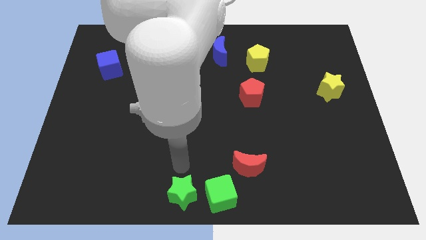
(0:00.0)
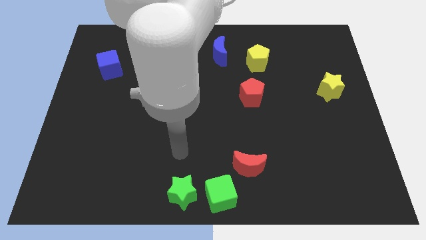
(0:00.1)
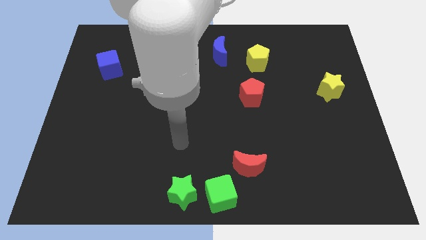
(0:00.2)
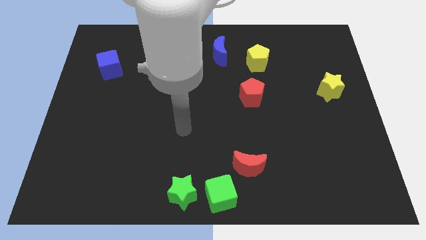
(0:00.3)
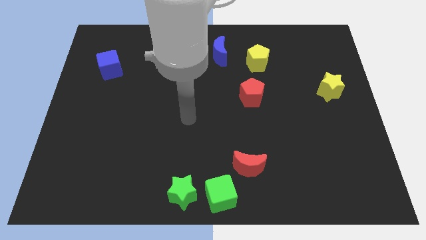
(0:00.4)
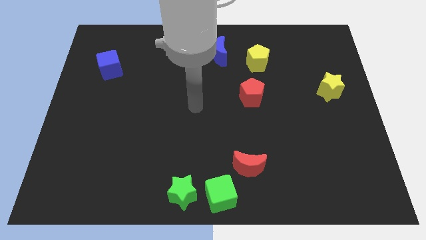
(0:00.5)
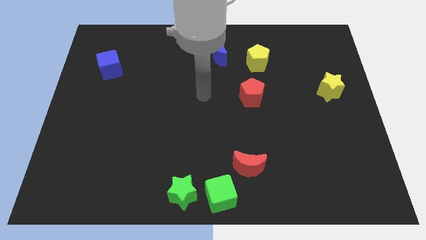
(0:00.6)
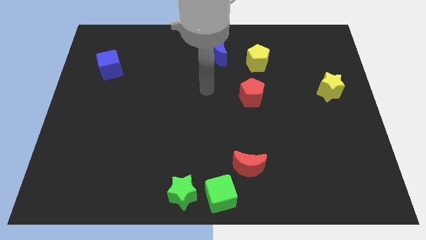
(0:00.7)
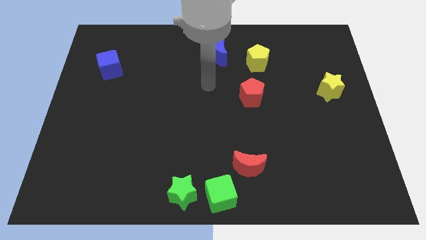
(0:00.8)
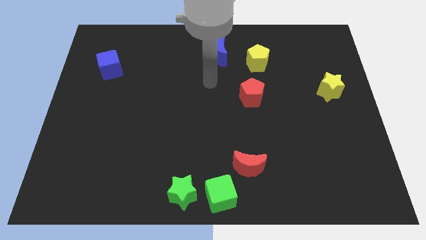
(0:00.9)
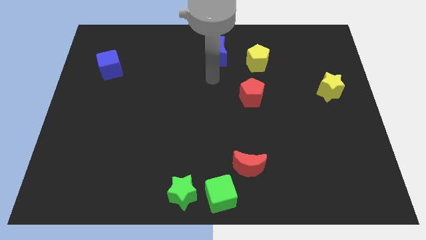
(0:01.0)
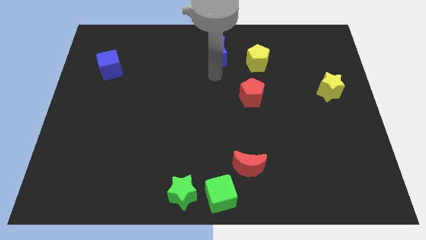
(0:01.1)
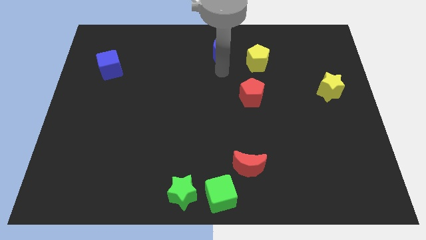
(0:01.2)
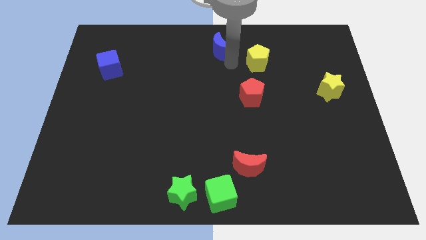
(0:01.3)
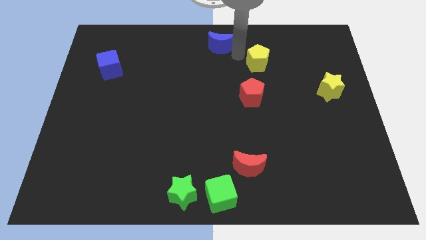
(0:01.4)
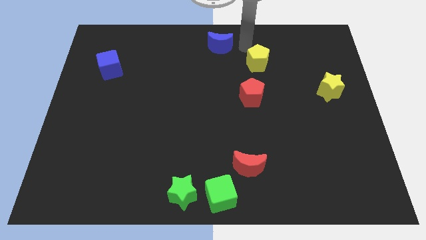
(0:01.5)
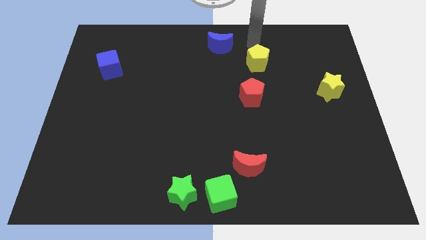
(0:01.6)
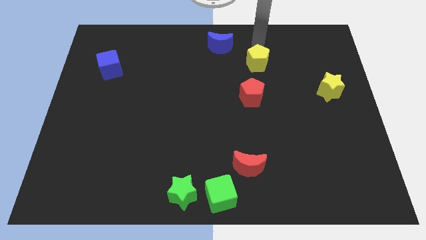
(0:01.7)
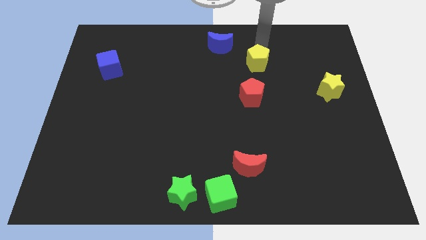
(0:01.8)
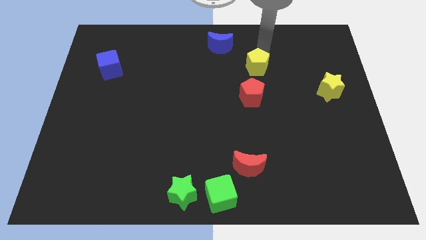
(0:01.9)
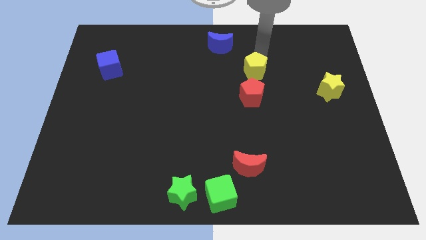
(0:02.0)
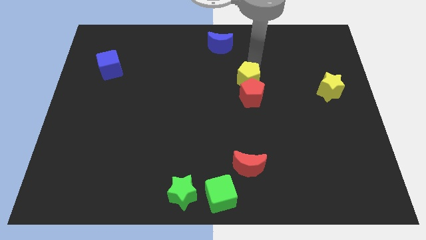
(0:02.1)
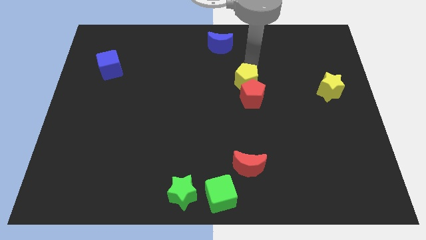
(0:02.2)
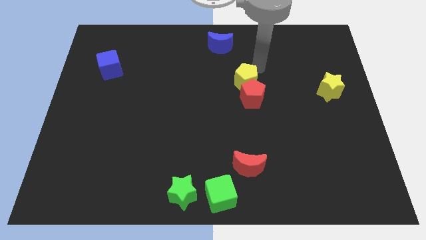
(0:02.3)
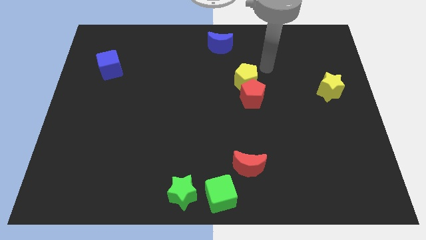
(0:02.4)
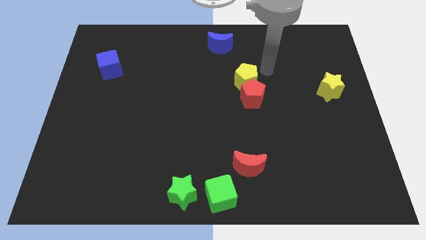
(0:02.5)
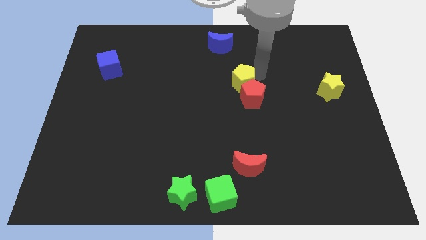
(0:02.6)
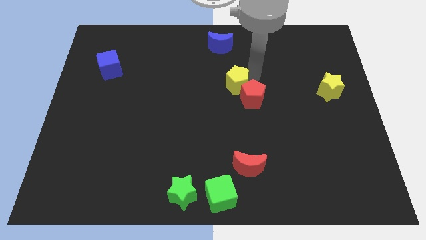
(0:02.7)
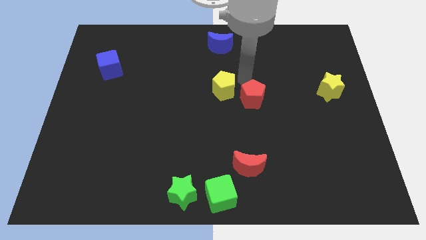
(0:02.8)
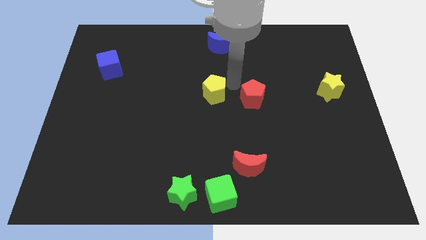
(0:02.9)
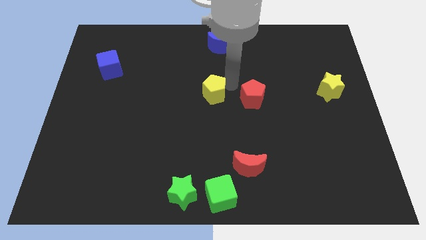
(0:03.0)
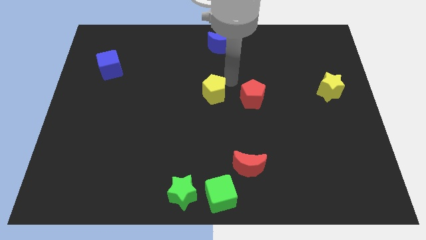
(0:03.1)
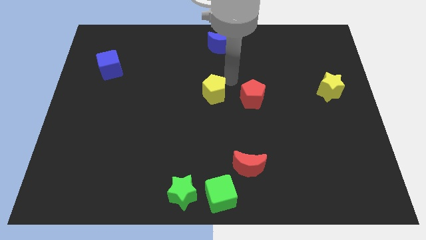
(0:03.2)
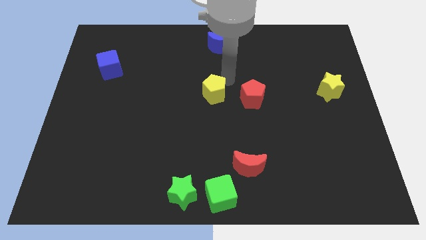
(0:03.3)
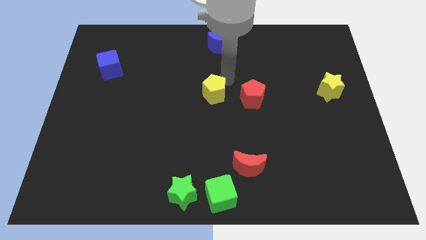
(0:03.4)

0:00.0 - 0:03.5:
slide the yellow pentagon to the left side of the red pentagon

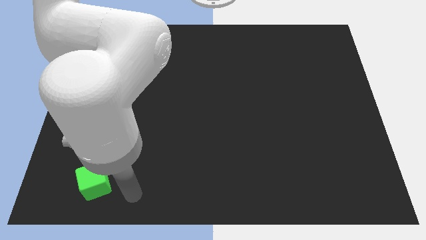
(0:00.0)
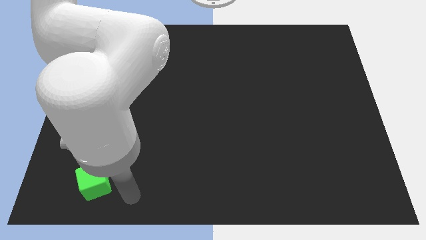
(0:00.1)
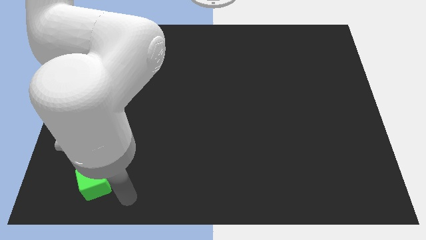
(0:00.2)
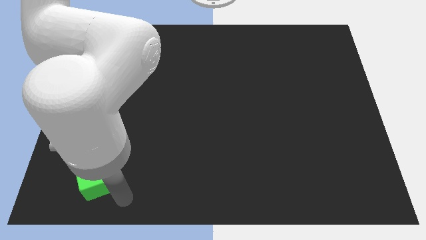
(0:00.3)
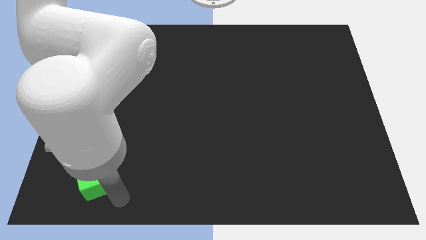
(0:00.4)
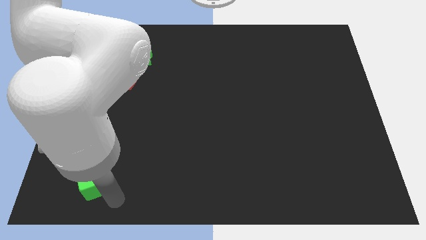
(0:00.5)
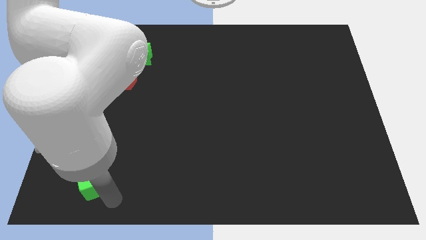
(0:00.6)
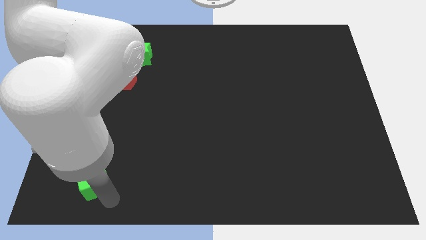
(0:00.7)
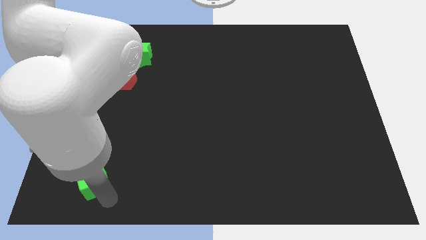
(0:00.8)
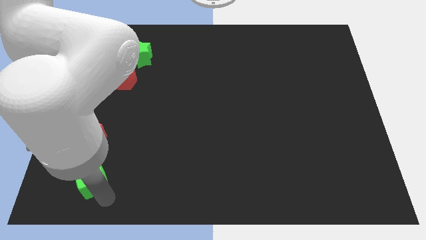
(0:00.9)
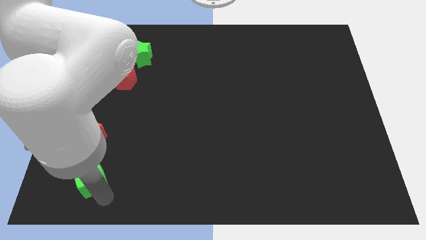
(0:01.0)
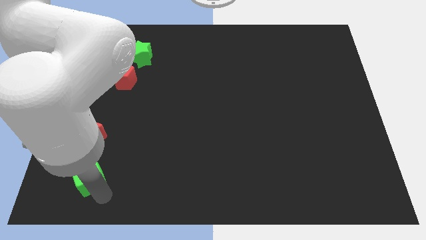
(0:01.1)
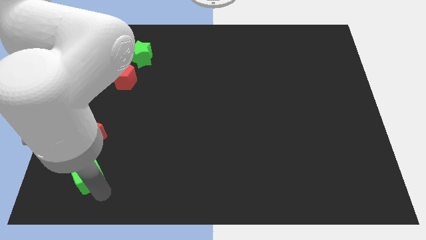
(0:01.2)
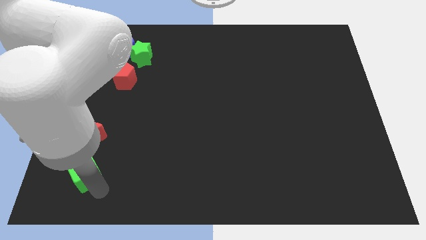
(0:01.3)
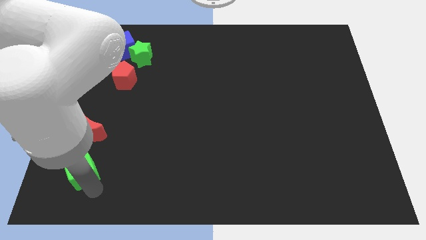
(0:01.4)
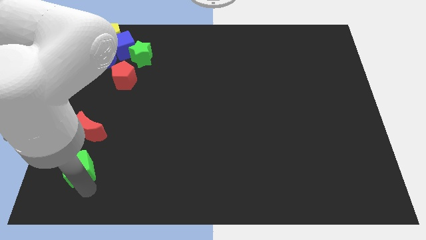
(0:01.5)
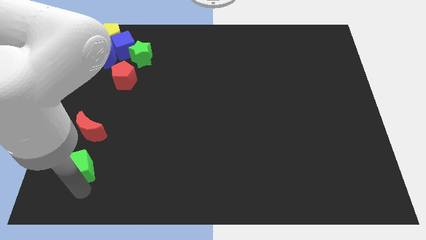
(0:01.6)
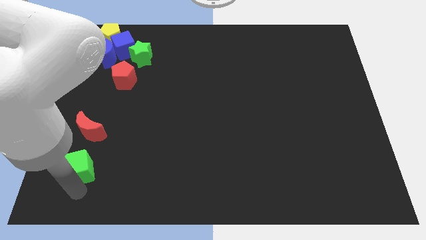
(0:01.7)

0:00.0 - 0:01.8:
put the green cube below the red crescent

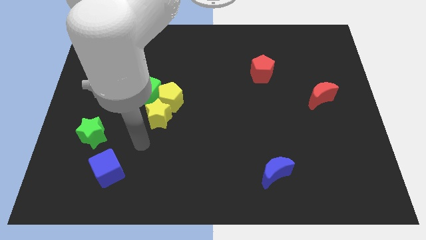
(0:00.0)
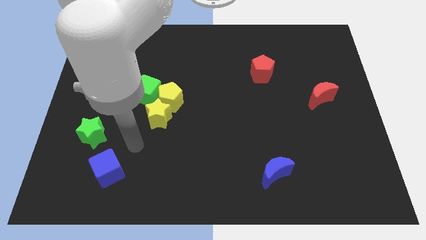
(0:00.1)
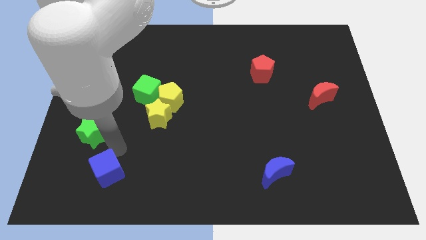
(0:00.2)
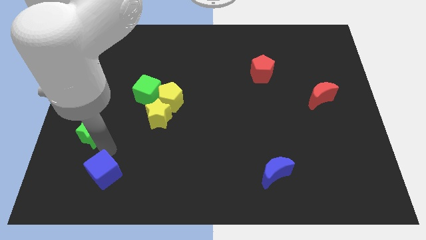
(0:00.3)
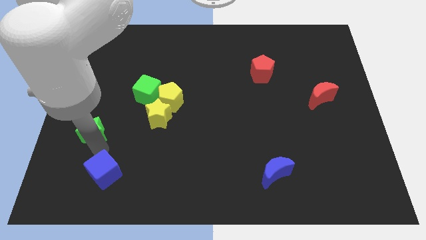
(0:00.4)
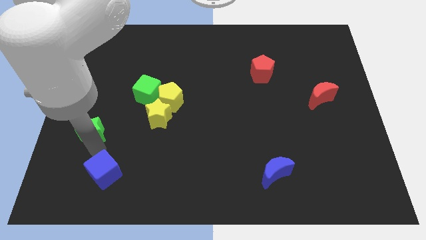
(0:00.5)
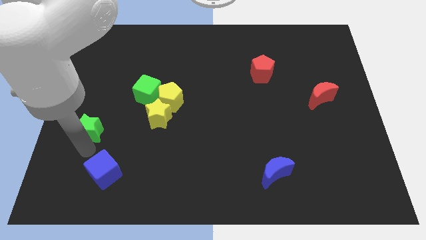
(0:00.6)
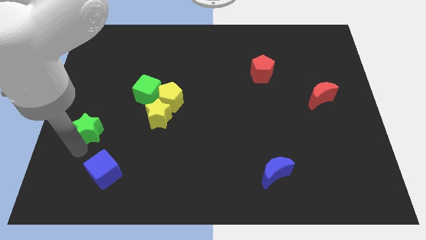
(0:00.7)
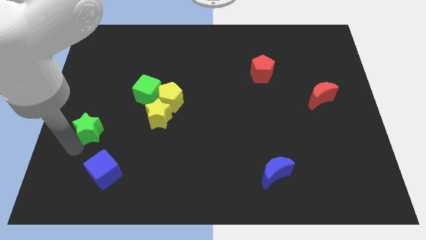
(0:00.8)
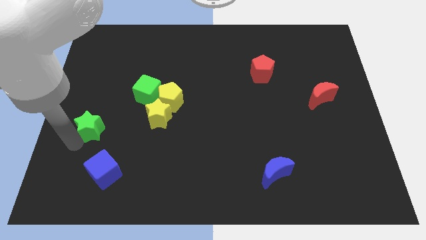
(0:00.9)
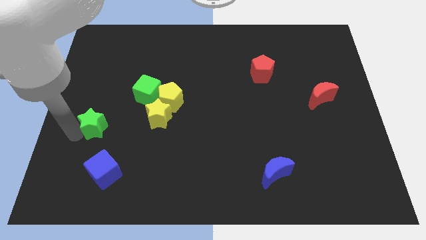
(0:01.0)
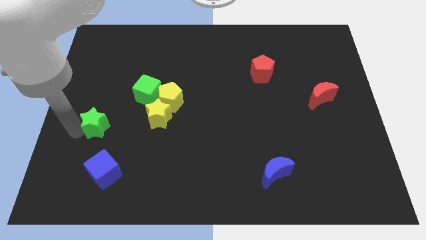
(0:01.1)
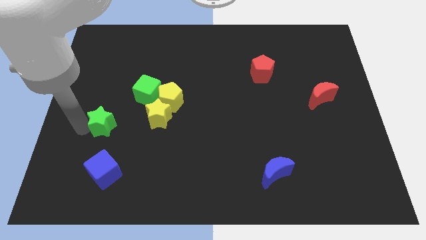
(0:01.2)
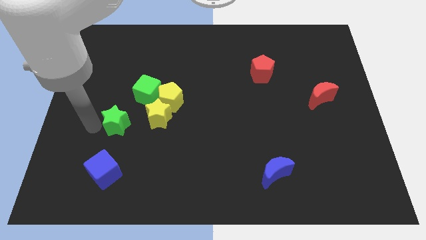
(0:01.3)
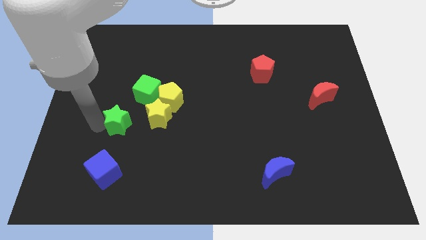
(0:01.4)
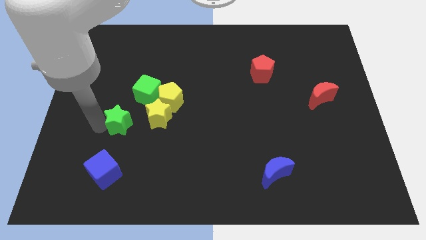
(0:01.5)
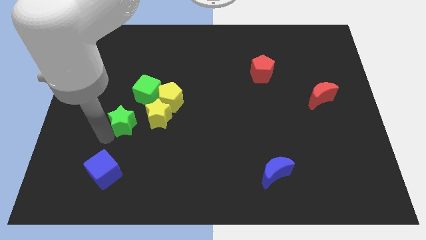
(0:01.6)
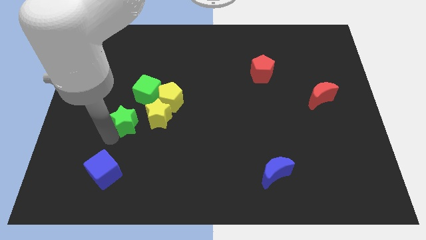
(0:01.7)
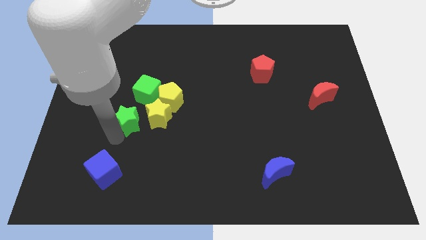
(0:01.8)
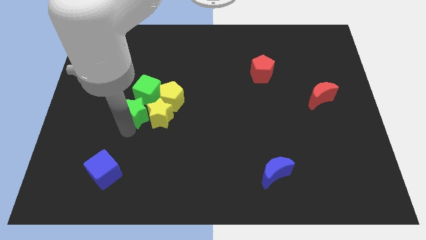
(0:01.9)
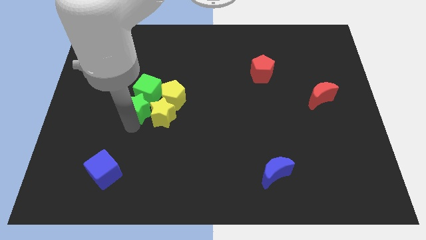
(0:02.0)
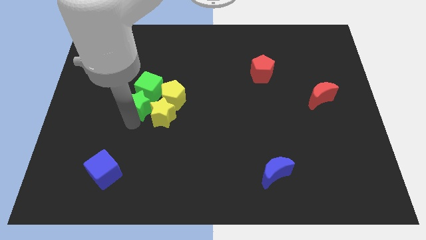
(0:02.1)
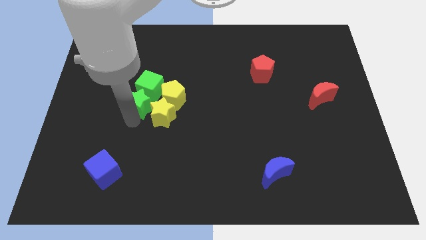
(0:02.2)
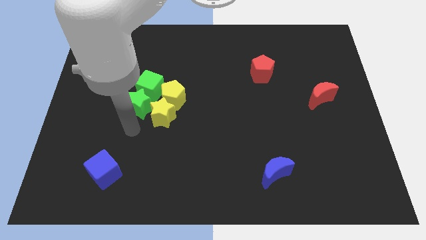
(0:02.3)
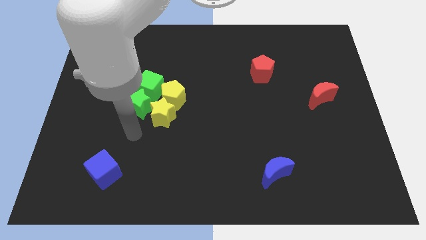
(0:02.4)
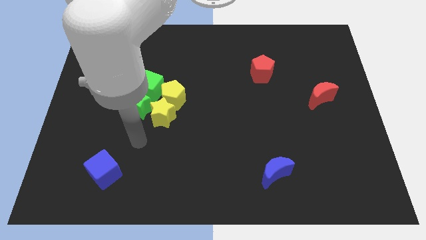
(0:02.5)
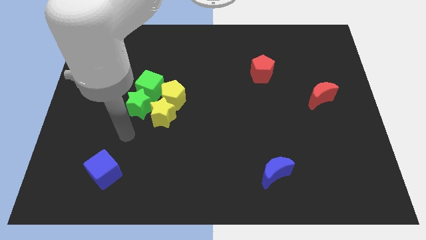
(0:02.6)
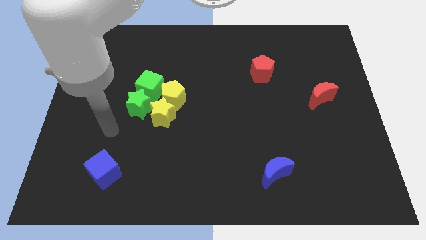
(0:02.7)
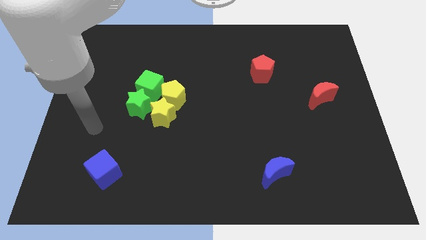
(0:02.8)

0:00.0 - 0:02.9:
push the green star into the group of blocks

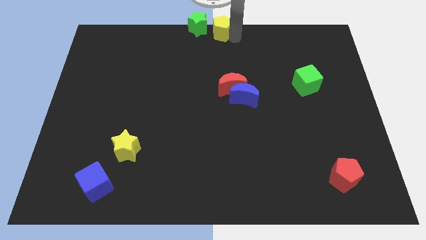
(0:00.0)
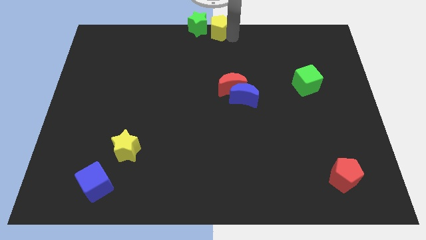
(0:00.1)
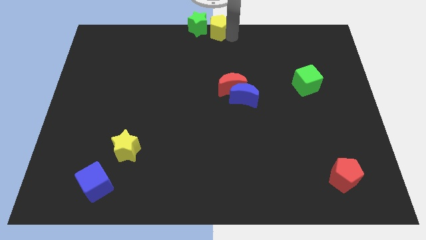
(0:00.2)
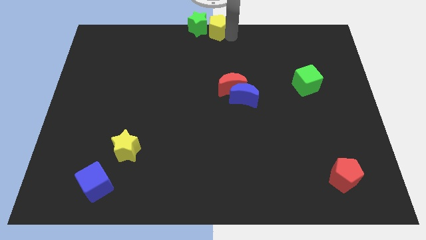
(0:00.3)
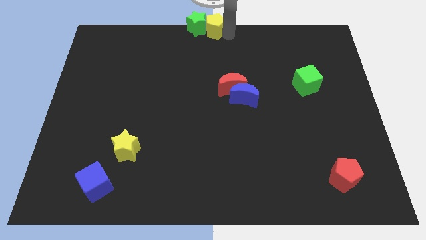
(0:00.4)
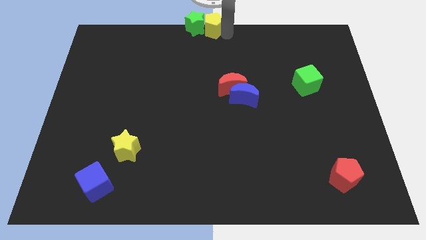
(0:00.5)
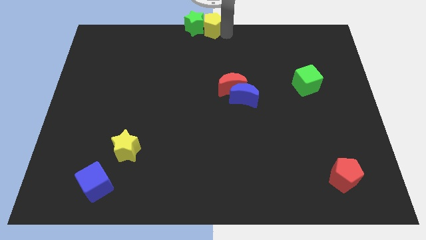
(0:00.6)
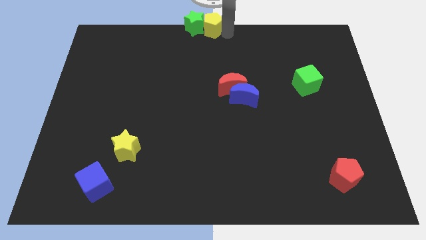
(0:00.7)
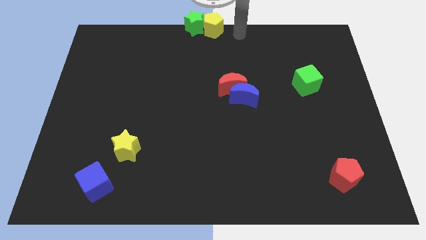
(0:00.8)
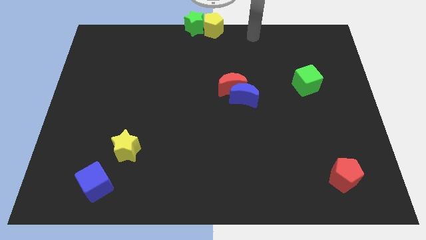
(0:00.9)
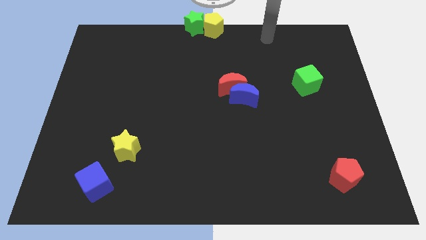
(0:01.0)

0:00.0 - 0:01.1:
push the yellow pentagon into the green star
